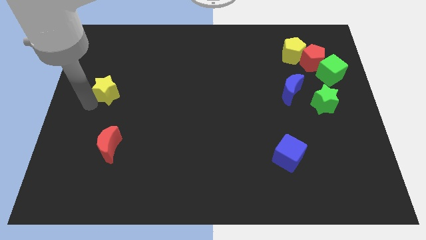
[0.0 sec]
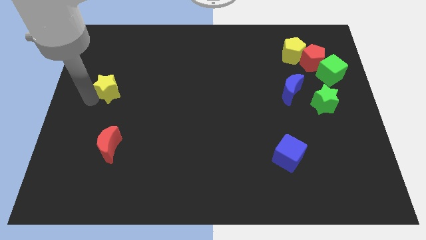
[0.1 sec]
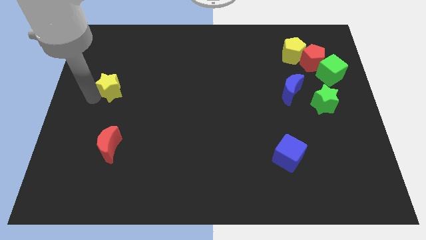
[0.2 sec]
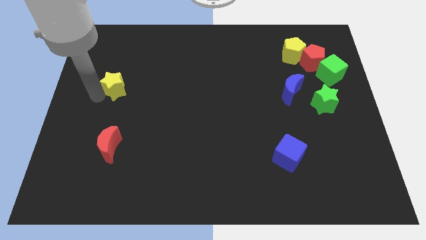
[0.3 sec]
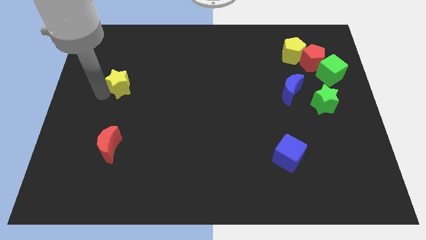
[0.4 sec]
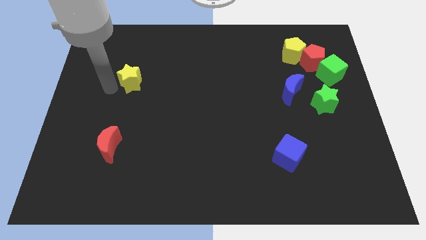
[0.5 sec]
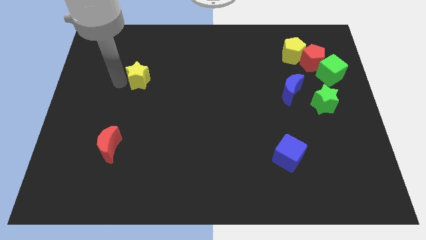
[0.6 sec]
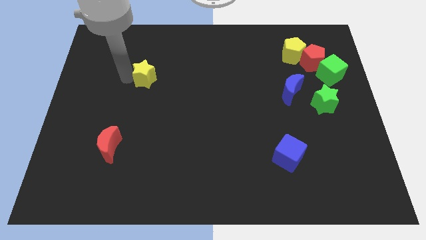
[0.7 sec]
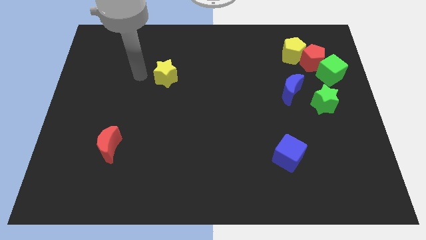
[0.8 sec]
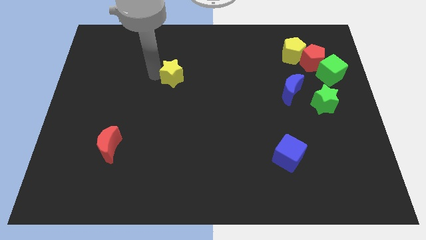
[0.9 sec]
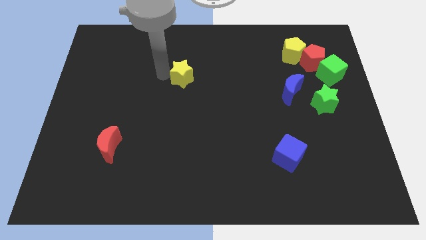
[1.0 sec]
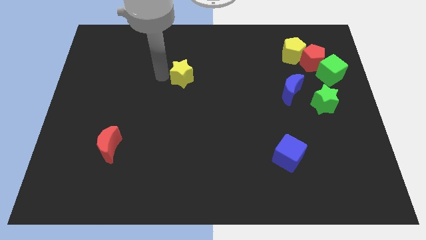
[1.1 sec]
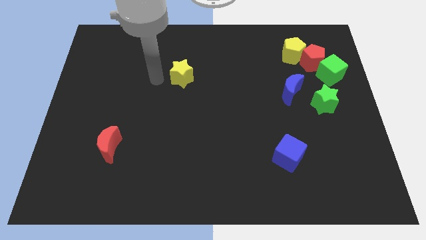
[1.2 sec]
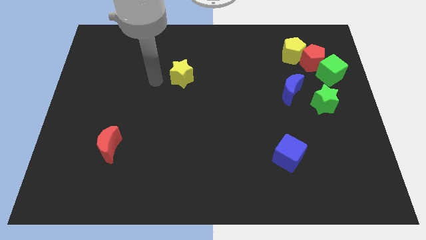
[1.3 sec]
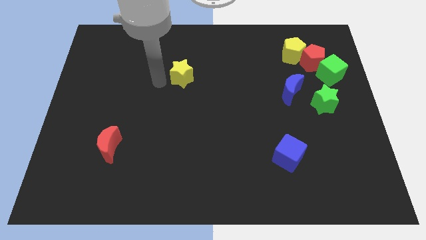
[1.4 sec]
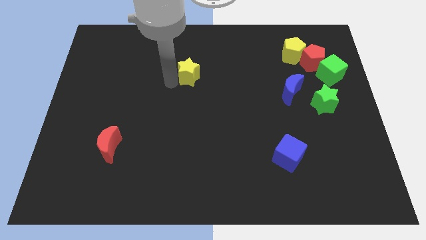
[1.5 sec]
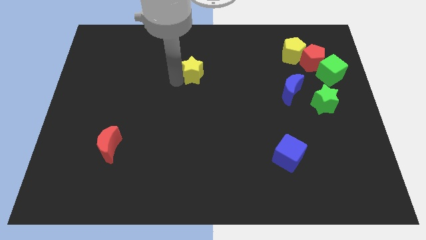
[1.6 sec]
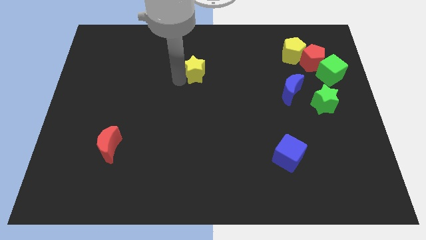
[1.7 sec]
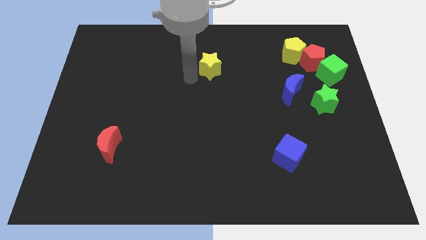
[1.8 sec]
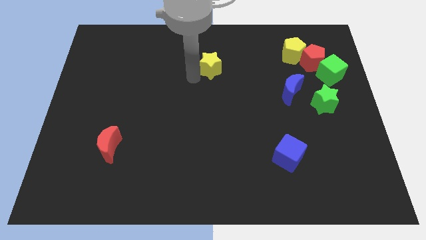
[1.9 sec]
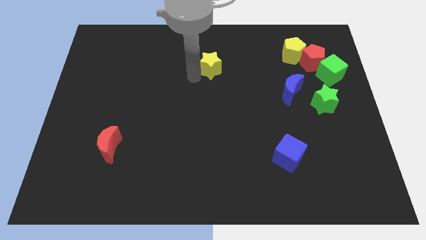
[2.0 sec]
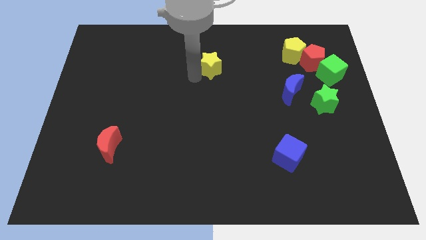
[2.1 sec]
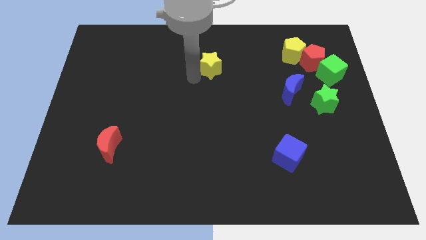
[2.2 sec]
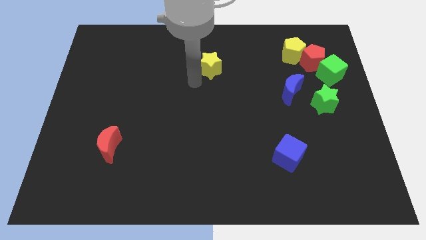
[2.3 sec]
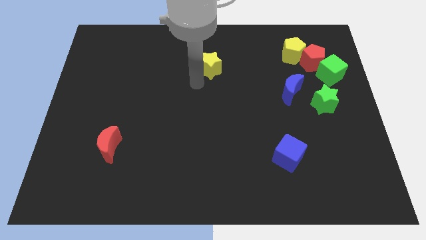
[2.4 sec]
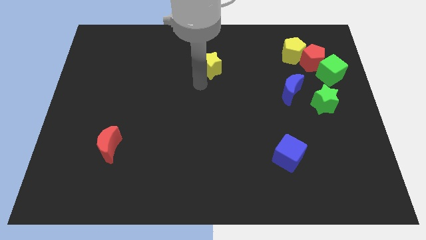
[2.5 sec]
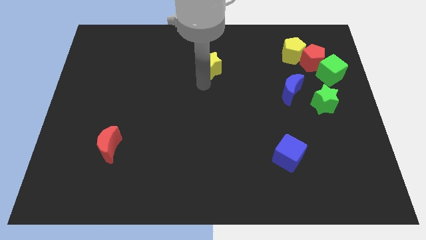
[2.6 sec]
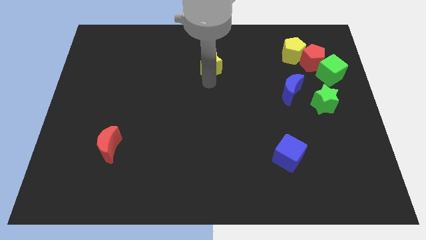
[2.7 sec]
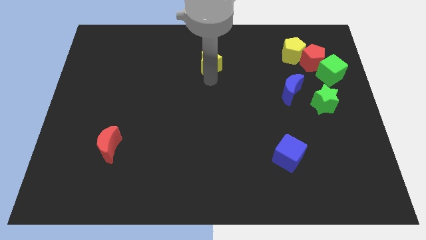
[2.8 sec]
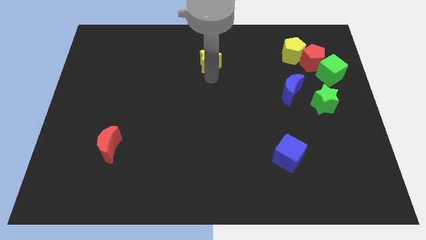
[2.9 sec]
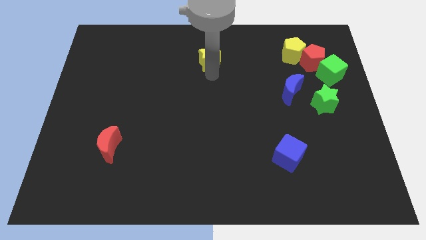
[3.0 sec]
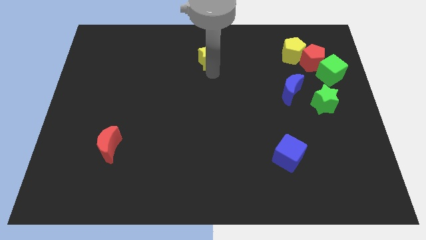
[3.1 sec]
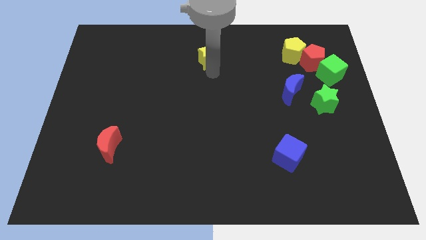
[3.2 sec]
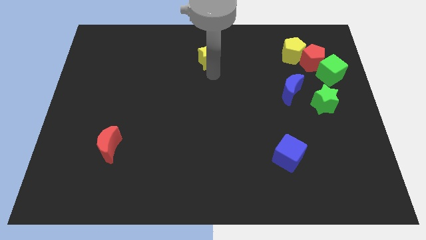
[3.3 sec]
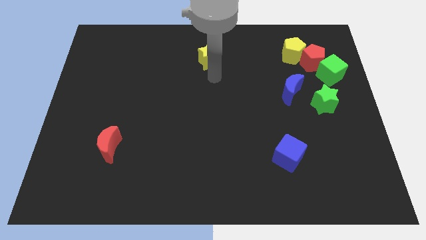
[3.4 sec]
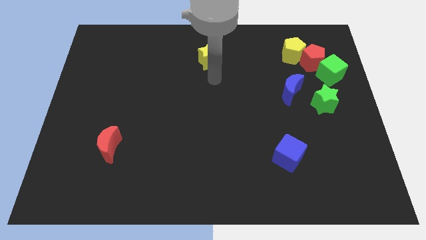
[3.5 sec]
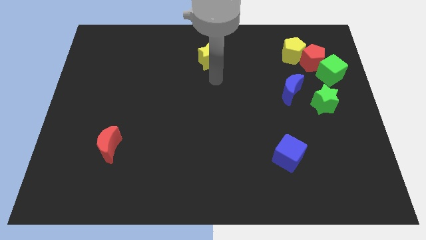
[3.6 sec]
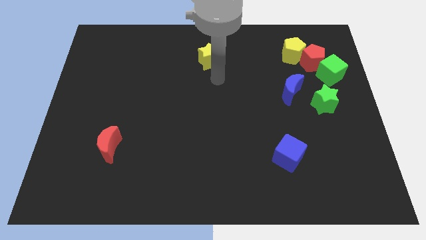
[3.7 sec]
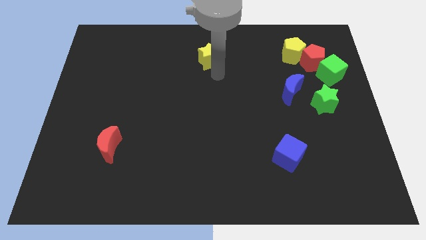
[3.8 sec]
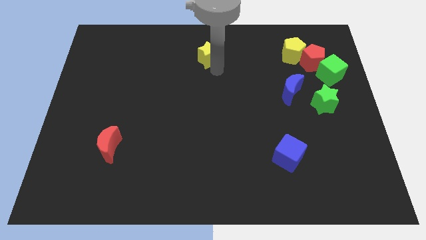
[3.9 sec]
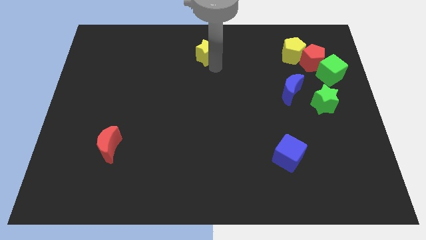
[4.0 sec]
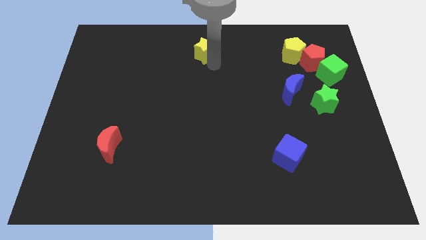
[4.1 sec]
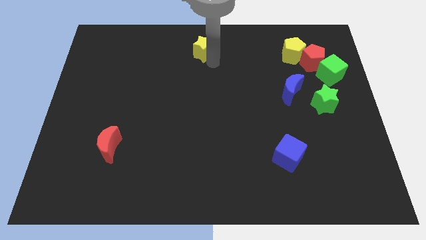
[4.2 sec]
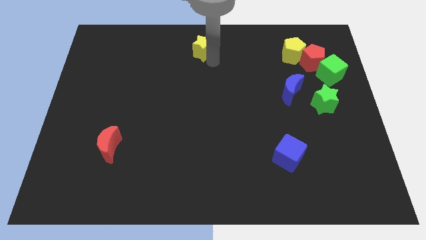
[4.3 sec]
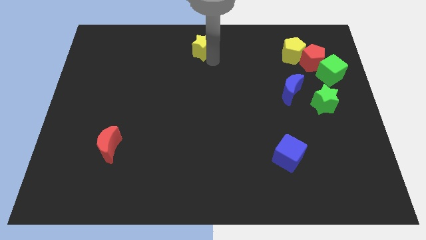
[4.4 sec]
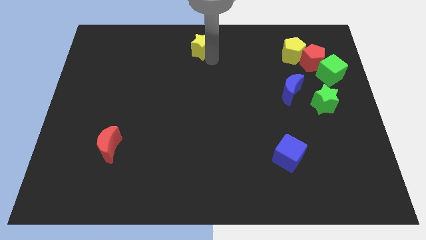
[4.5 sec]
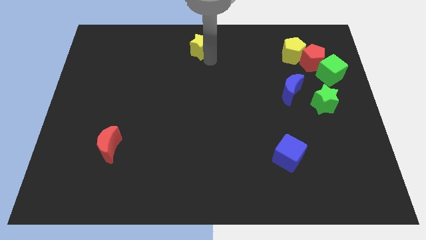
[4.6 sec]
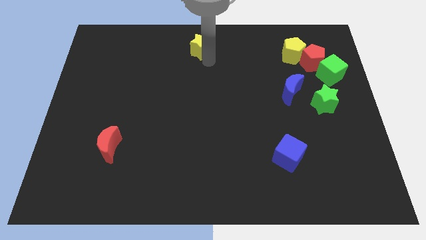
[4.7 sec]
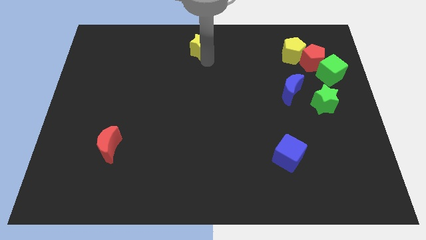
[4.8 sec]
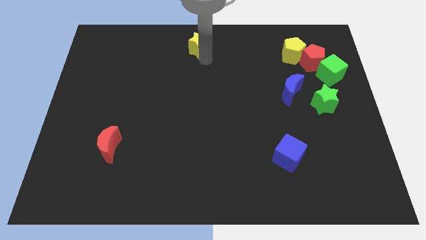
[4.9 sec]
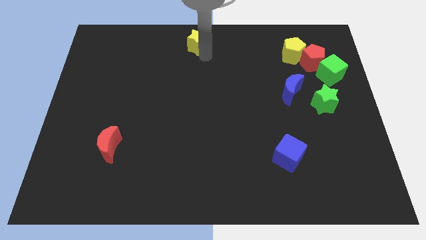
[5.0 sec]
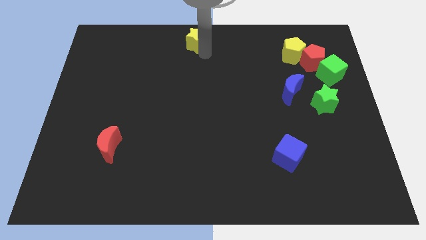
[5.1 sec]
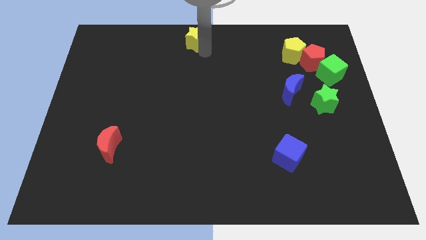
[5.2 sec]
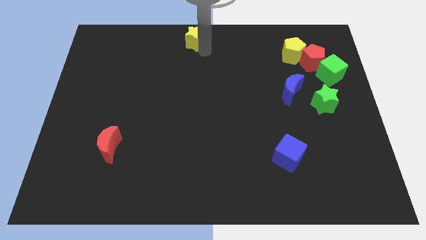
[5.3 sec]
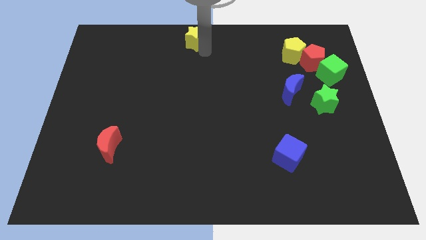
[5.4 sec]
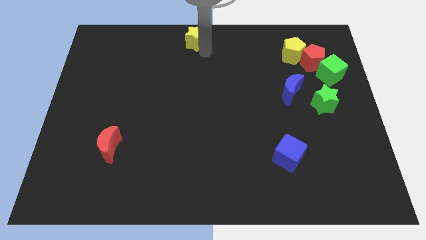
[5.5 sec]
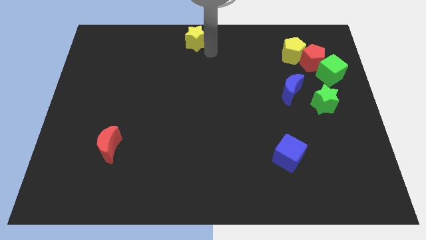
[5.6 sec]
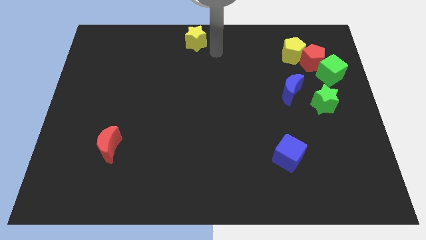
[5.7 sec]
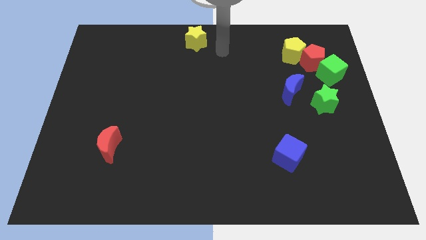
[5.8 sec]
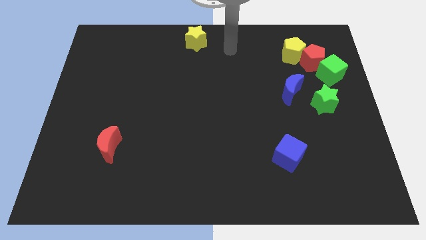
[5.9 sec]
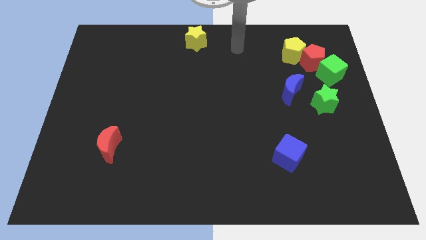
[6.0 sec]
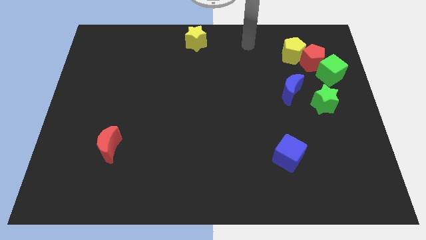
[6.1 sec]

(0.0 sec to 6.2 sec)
push the yellow star to the top center of the board

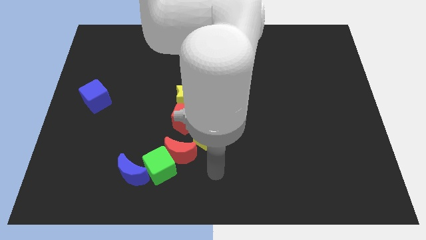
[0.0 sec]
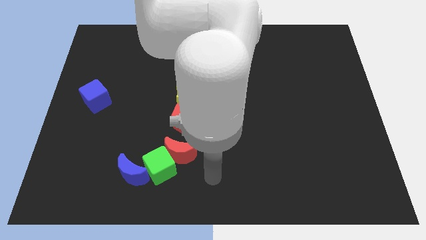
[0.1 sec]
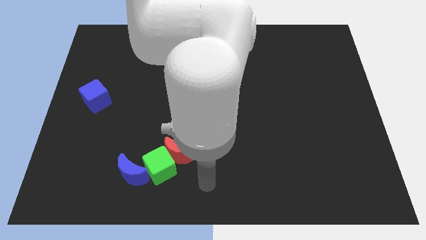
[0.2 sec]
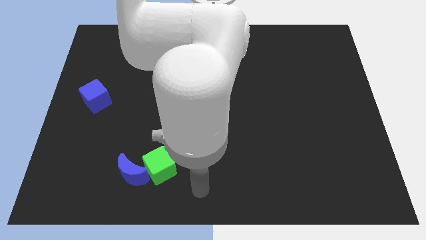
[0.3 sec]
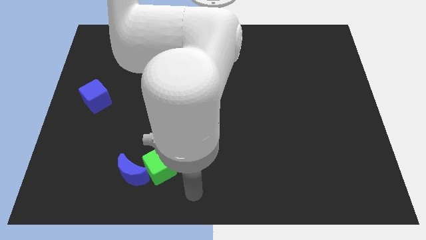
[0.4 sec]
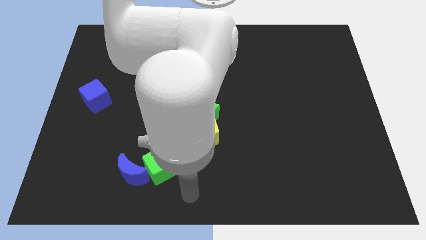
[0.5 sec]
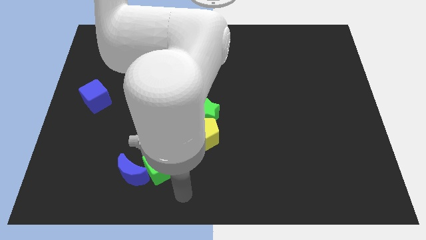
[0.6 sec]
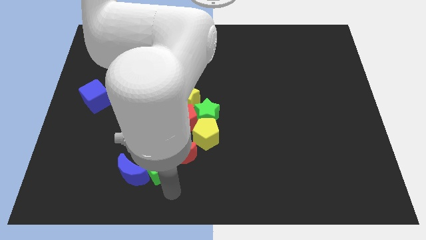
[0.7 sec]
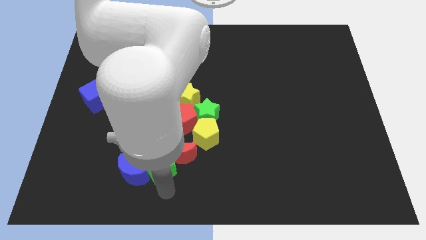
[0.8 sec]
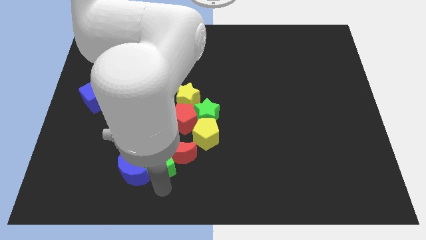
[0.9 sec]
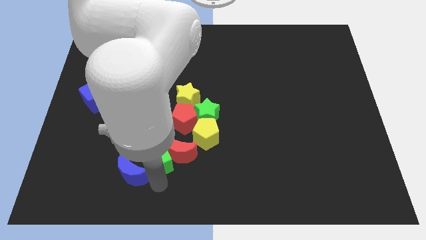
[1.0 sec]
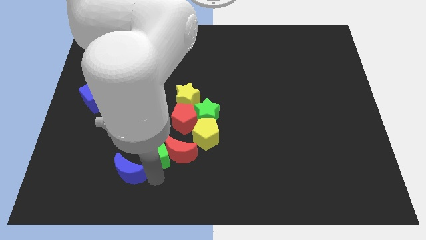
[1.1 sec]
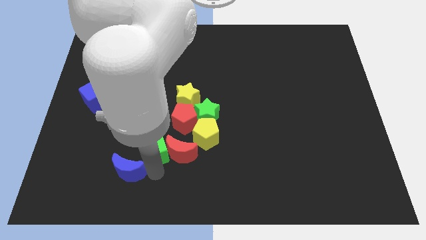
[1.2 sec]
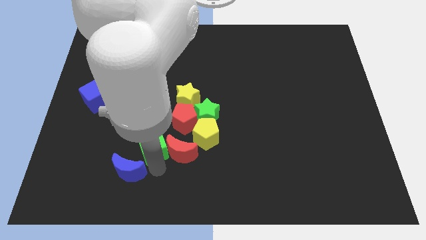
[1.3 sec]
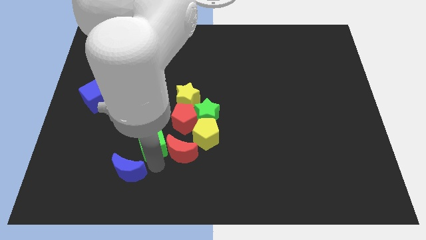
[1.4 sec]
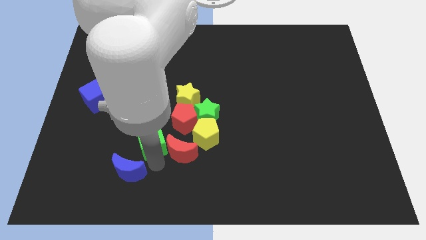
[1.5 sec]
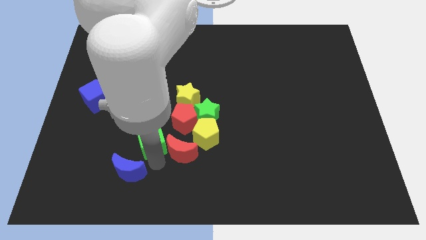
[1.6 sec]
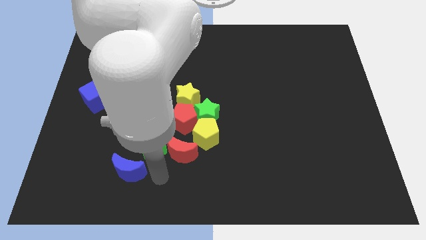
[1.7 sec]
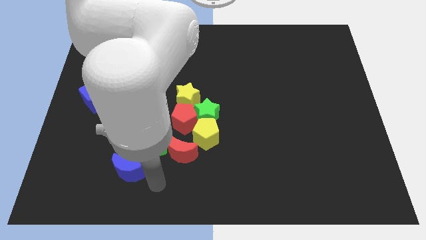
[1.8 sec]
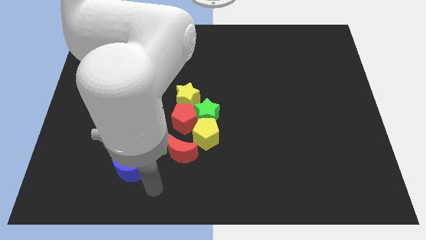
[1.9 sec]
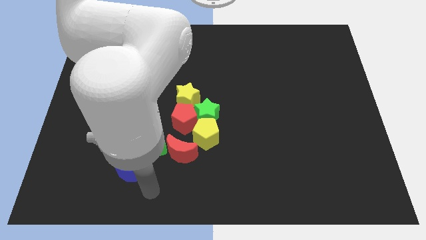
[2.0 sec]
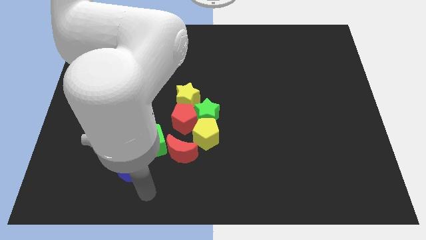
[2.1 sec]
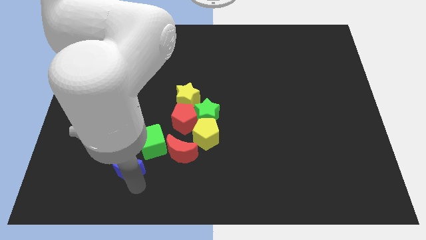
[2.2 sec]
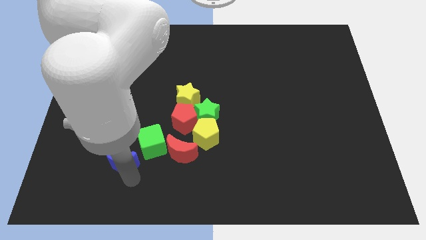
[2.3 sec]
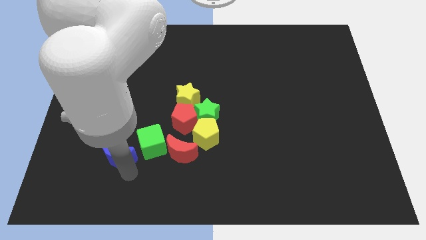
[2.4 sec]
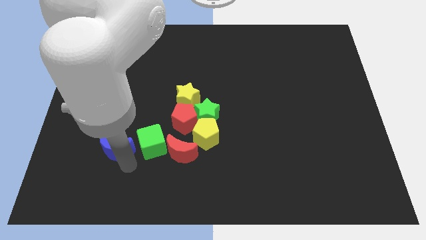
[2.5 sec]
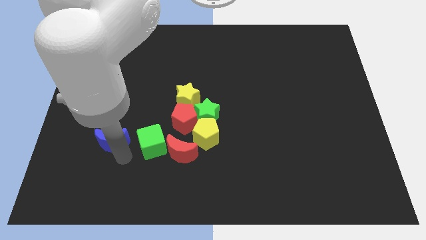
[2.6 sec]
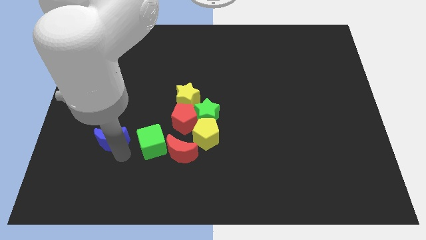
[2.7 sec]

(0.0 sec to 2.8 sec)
move the green cube a bit up
